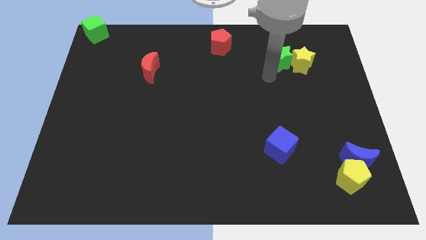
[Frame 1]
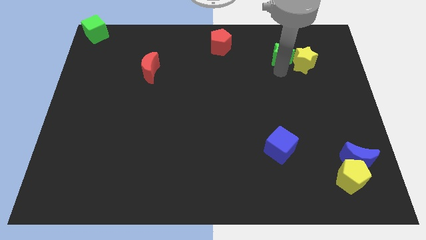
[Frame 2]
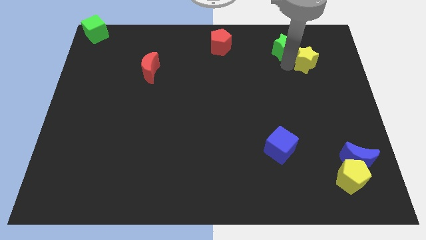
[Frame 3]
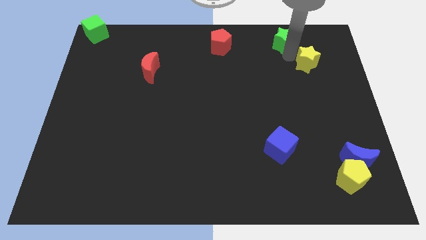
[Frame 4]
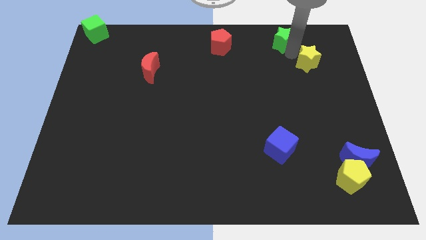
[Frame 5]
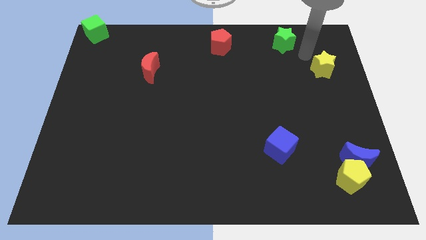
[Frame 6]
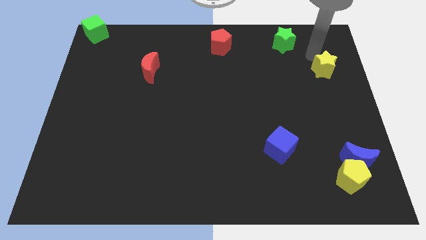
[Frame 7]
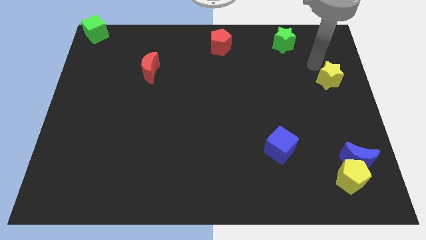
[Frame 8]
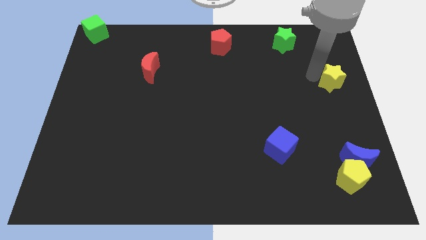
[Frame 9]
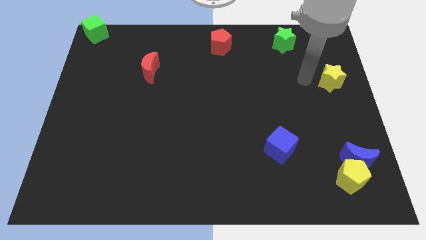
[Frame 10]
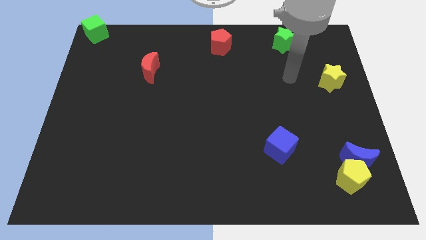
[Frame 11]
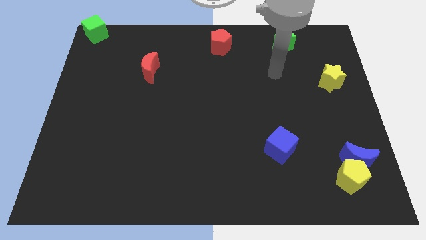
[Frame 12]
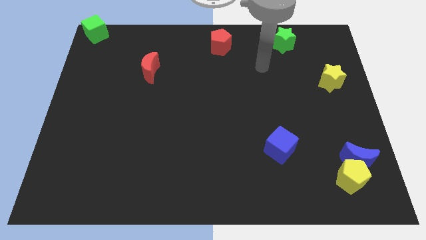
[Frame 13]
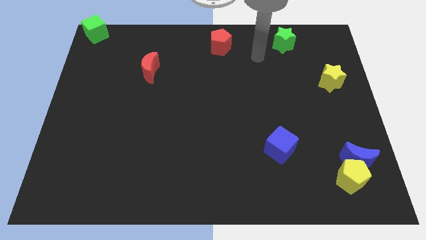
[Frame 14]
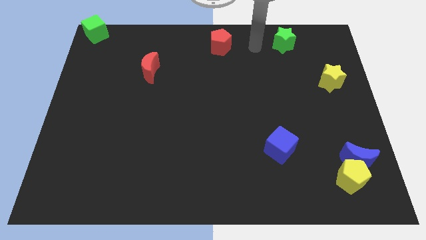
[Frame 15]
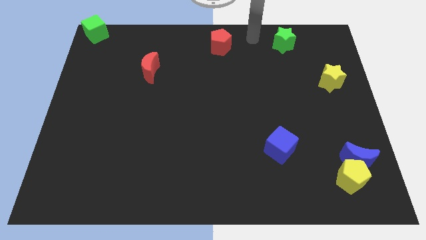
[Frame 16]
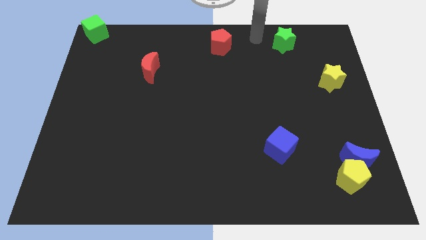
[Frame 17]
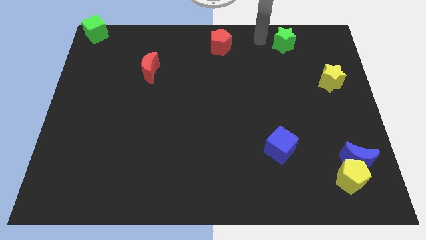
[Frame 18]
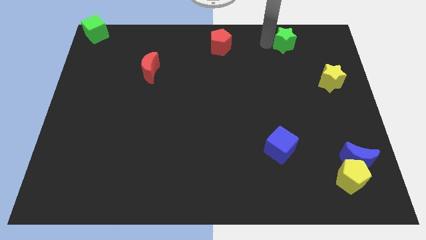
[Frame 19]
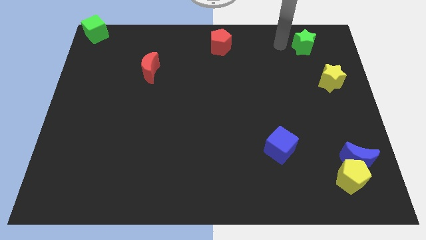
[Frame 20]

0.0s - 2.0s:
slightly push the yellow star to the top right of the board

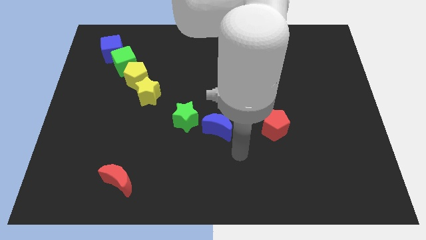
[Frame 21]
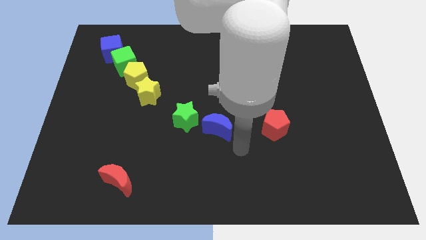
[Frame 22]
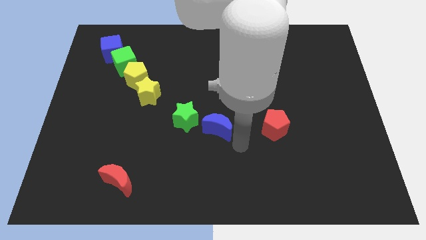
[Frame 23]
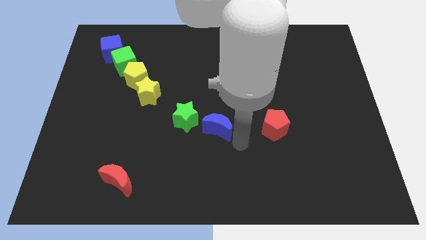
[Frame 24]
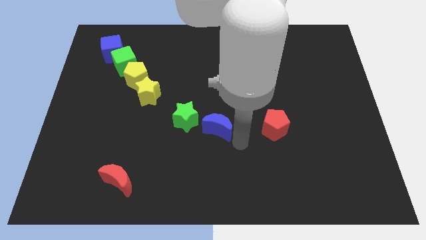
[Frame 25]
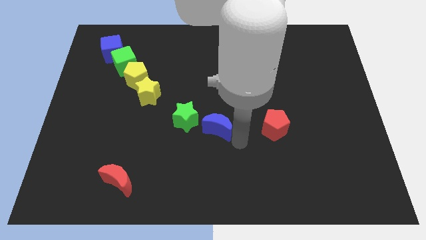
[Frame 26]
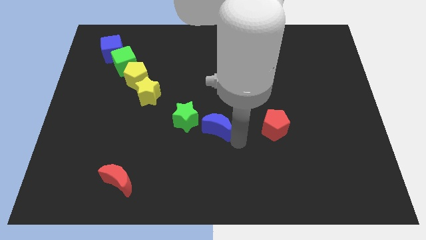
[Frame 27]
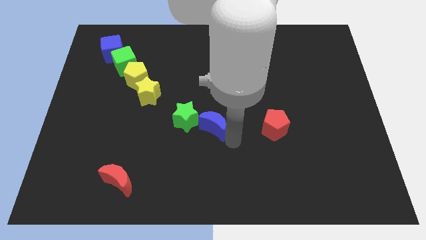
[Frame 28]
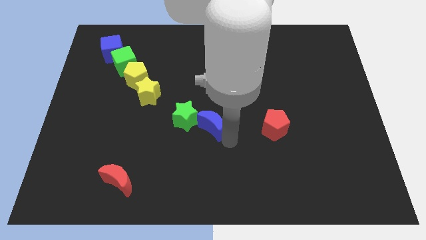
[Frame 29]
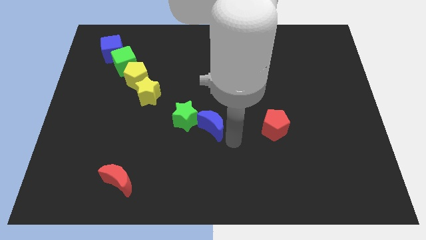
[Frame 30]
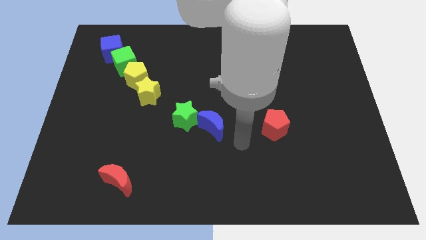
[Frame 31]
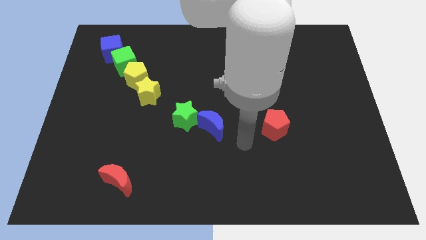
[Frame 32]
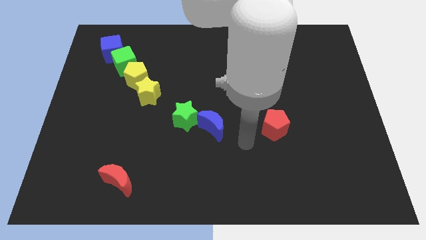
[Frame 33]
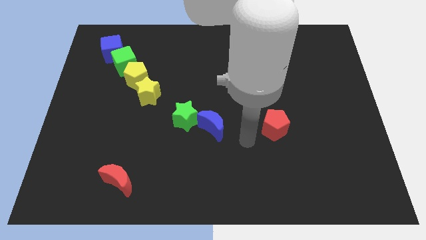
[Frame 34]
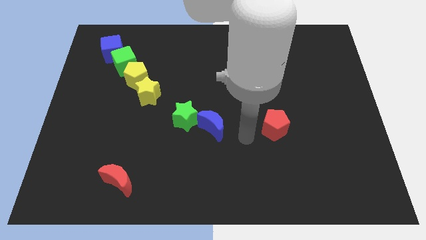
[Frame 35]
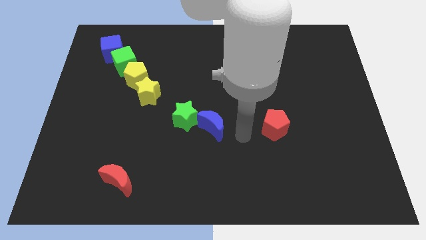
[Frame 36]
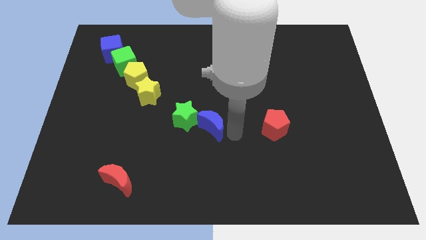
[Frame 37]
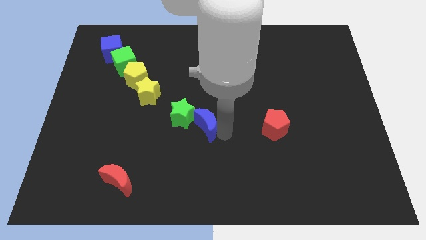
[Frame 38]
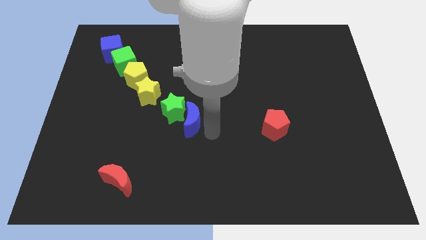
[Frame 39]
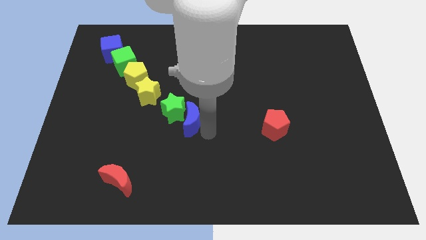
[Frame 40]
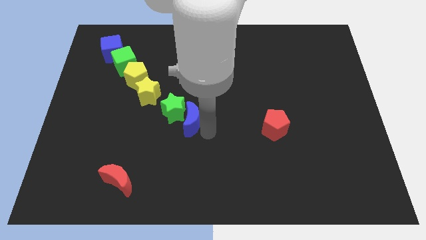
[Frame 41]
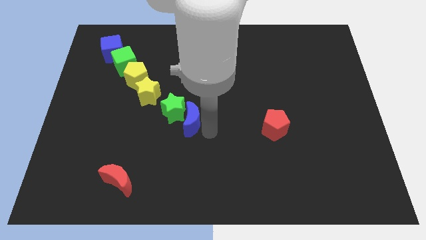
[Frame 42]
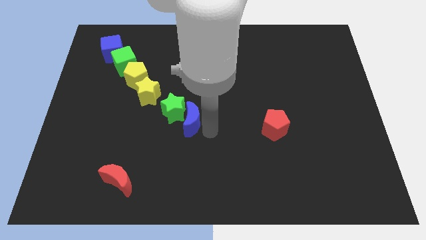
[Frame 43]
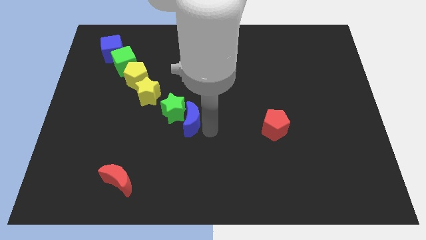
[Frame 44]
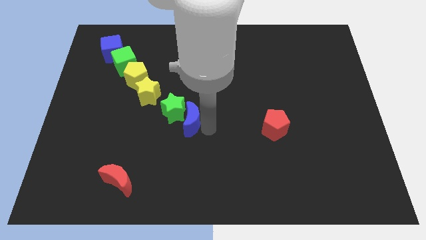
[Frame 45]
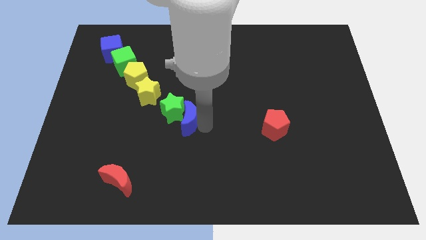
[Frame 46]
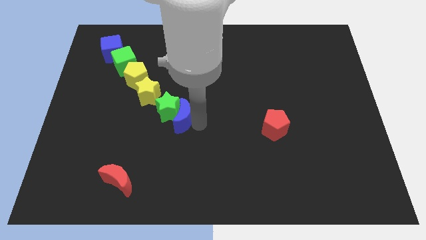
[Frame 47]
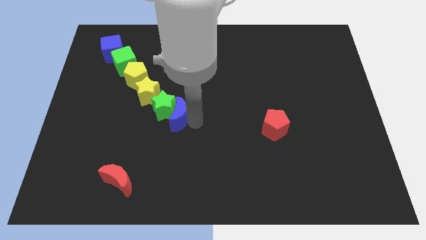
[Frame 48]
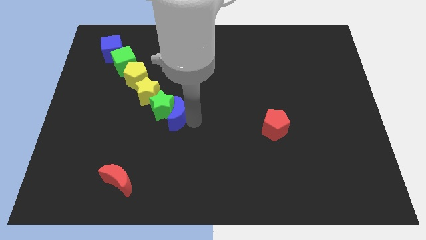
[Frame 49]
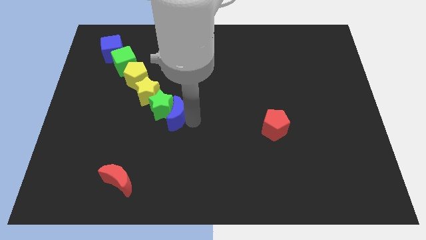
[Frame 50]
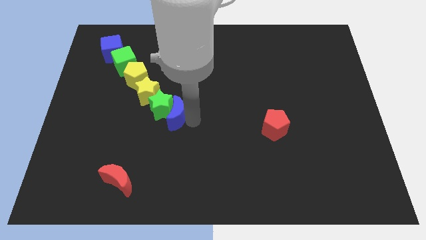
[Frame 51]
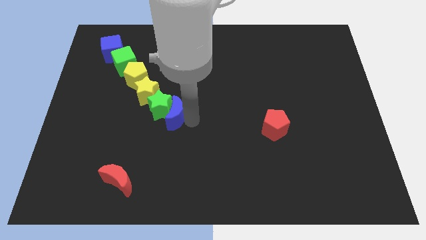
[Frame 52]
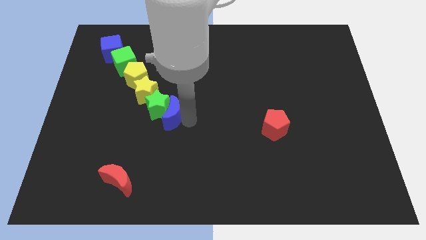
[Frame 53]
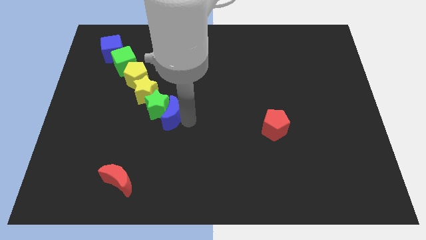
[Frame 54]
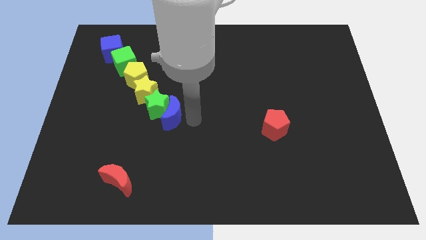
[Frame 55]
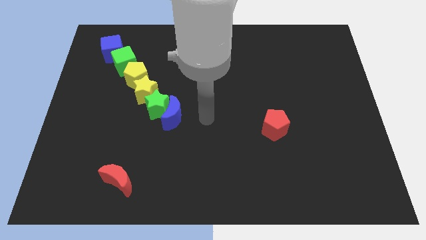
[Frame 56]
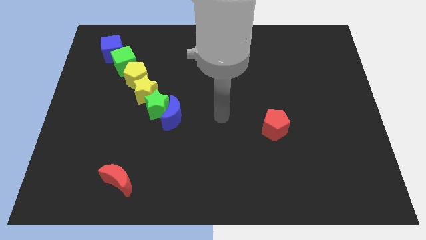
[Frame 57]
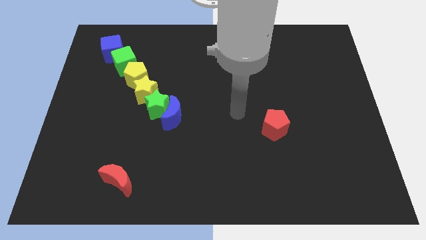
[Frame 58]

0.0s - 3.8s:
push the blue moon into green star diagonally

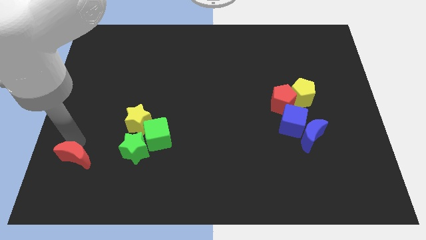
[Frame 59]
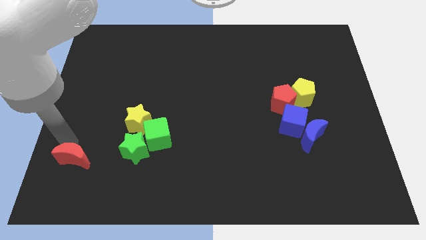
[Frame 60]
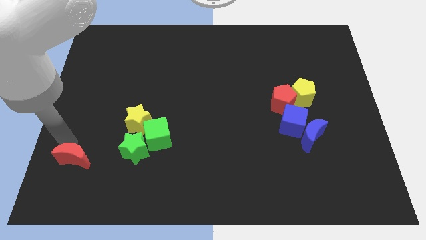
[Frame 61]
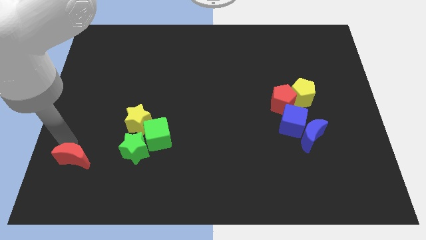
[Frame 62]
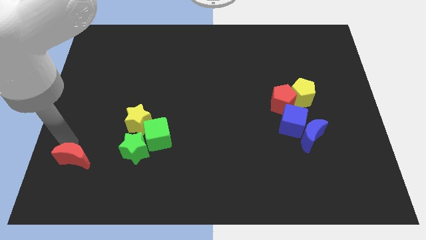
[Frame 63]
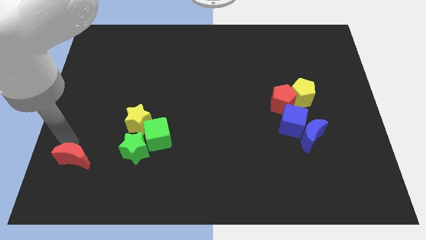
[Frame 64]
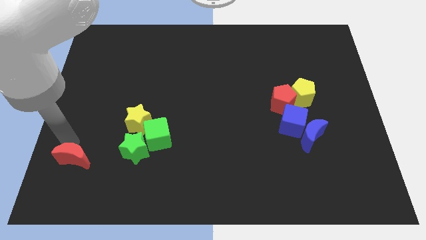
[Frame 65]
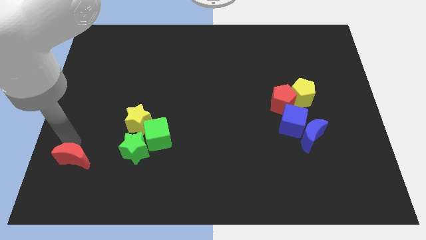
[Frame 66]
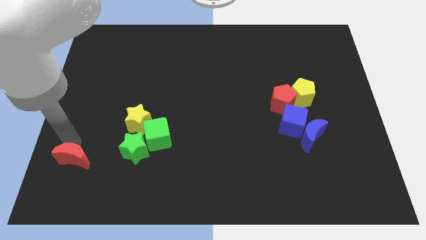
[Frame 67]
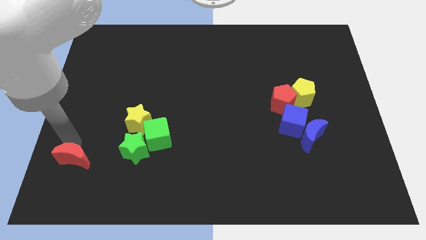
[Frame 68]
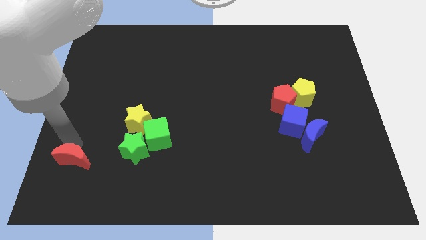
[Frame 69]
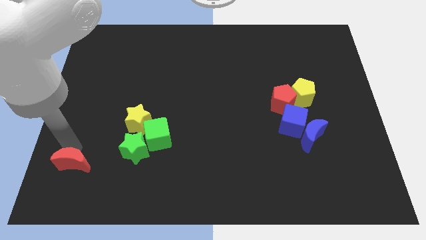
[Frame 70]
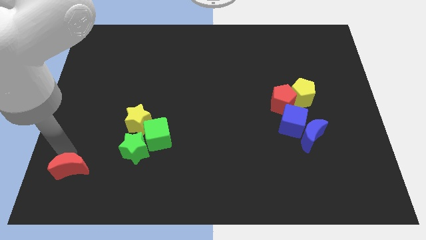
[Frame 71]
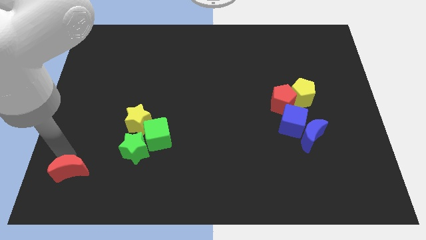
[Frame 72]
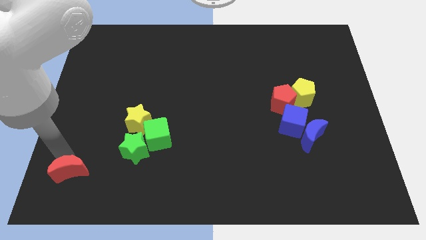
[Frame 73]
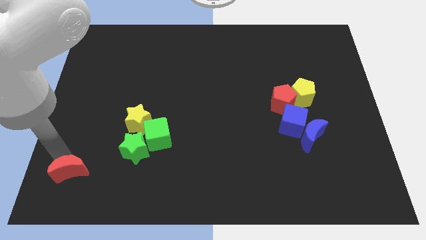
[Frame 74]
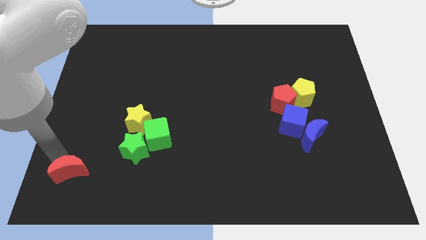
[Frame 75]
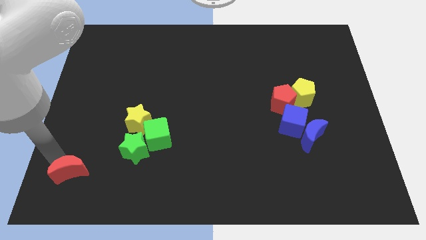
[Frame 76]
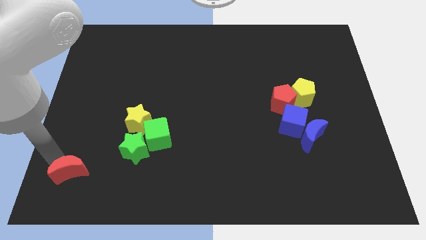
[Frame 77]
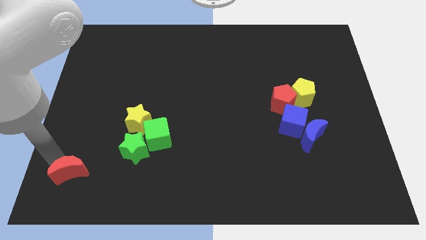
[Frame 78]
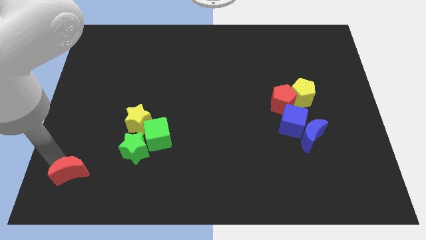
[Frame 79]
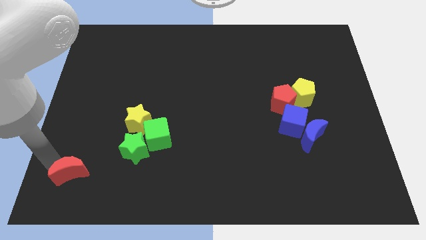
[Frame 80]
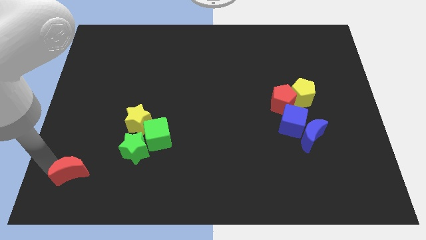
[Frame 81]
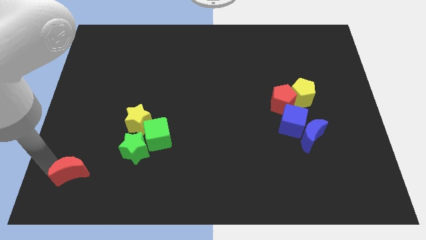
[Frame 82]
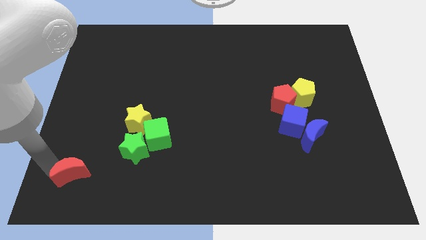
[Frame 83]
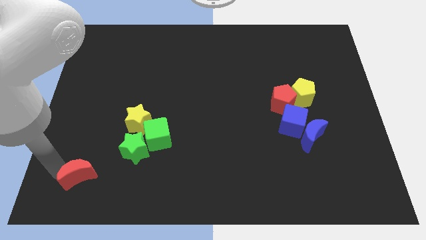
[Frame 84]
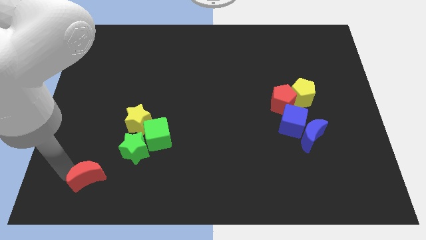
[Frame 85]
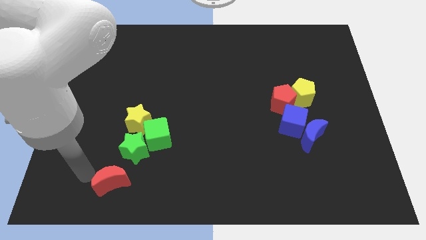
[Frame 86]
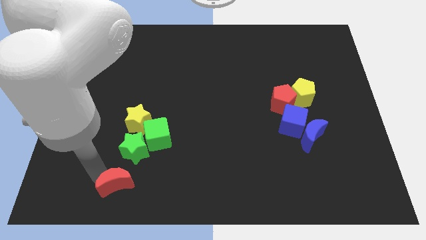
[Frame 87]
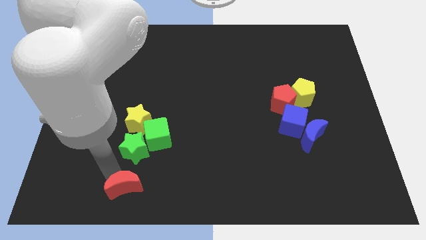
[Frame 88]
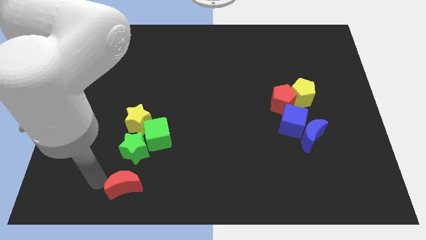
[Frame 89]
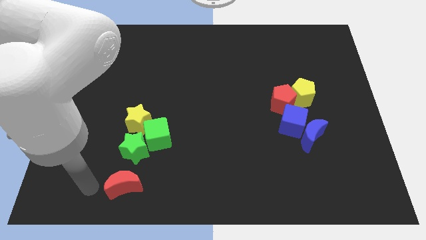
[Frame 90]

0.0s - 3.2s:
place red moon below green star
